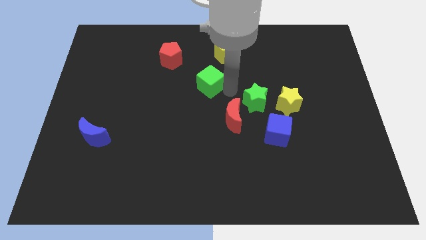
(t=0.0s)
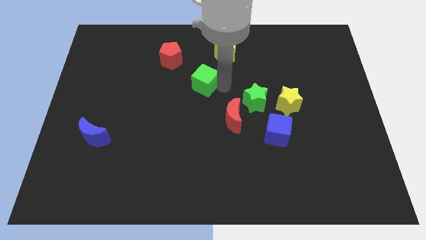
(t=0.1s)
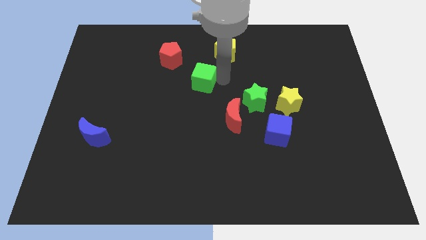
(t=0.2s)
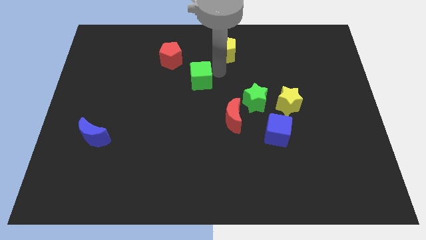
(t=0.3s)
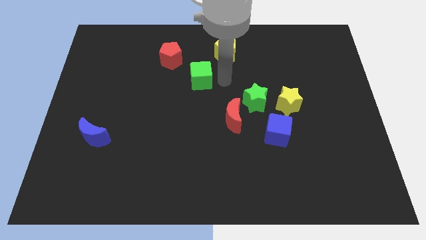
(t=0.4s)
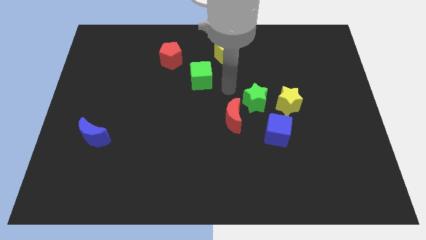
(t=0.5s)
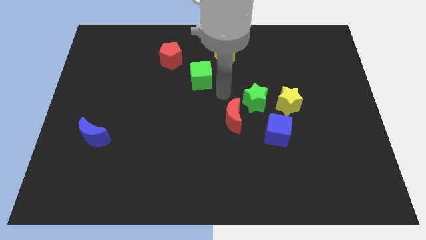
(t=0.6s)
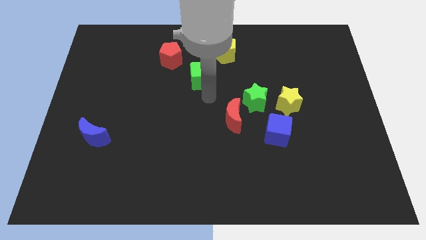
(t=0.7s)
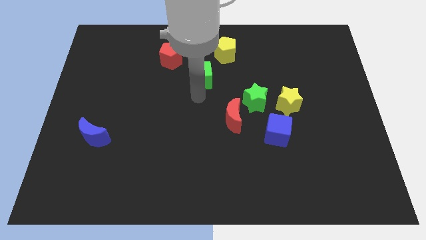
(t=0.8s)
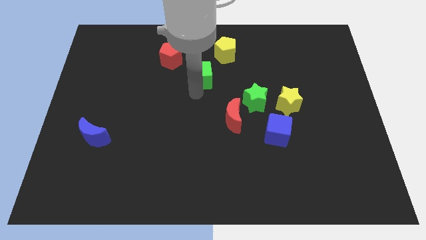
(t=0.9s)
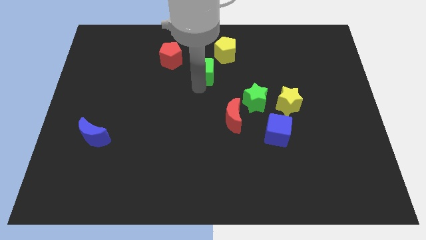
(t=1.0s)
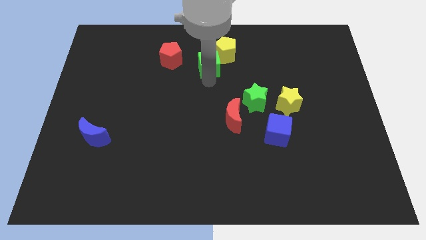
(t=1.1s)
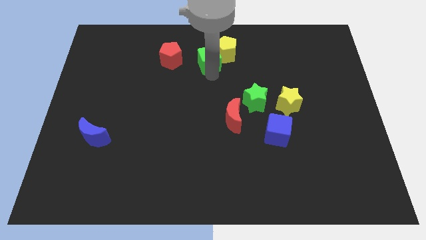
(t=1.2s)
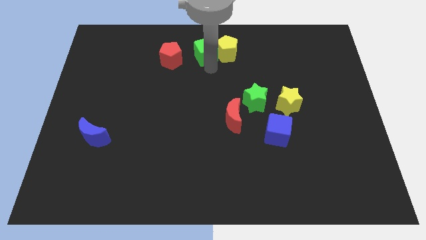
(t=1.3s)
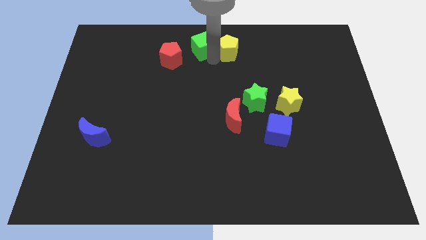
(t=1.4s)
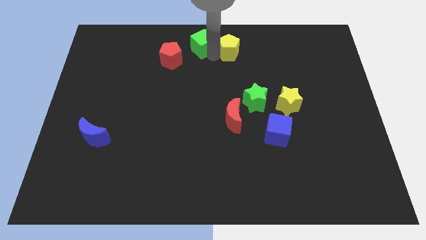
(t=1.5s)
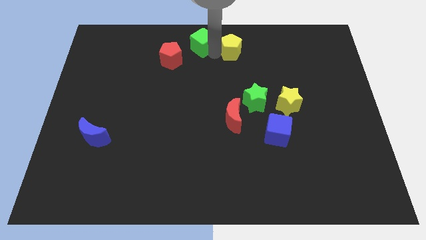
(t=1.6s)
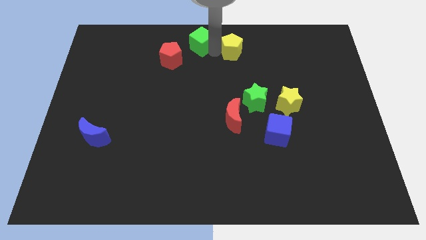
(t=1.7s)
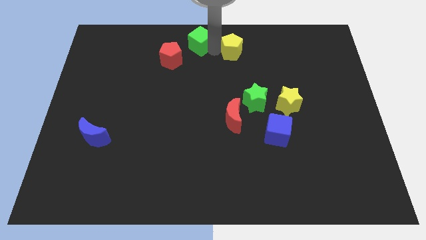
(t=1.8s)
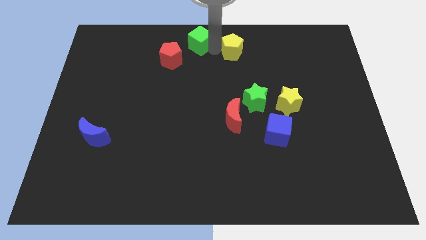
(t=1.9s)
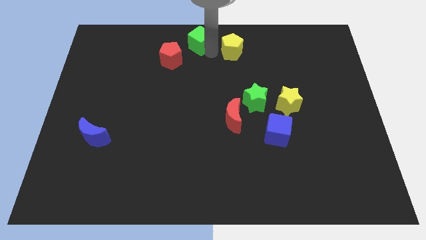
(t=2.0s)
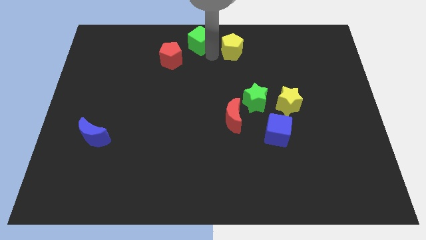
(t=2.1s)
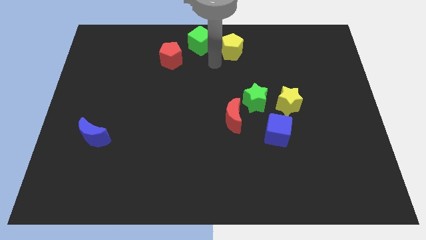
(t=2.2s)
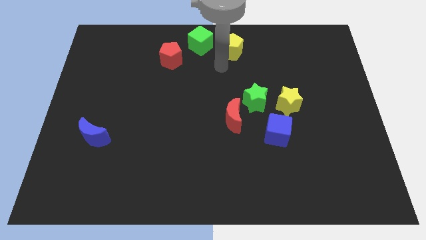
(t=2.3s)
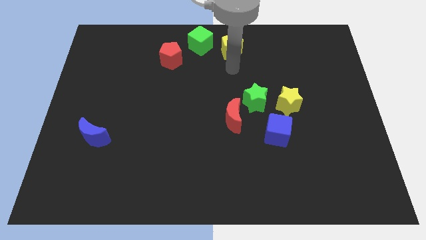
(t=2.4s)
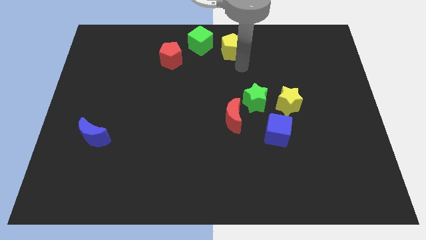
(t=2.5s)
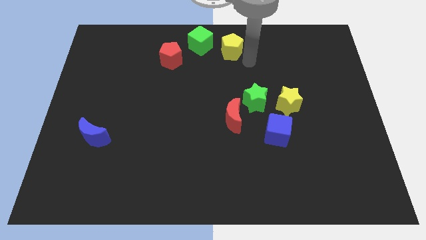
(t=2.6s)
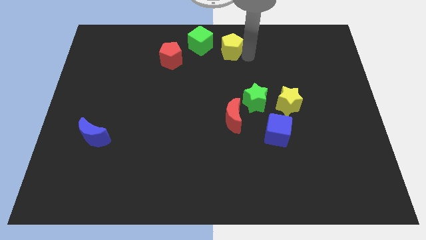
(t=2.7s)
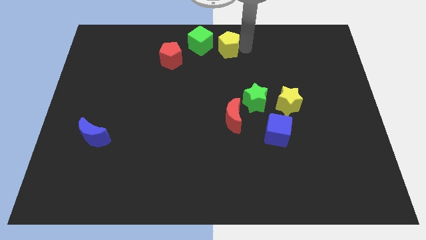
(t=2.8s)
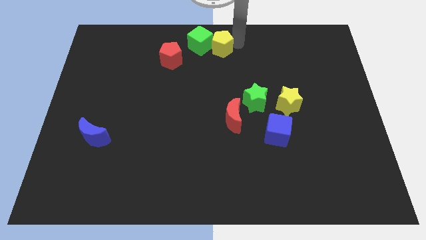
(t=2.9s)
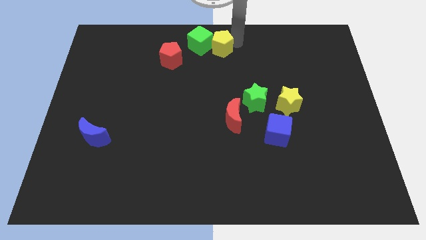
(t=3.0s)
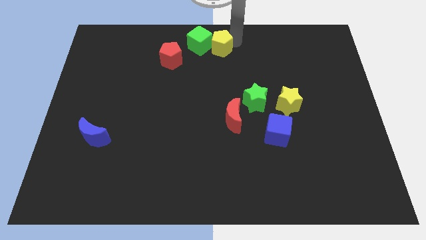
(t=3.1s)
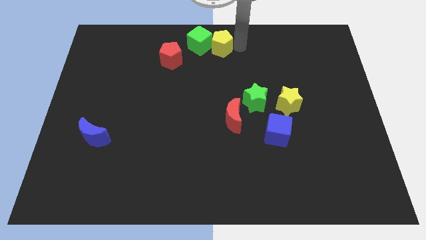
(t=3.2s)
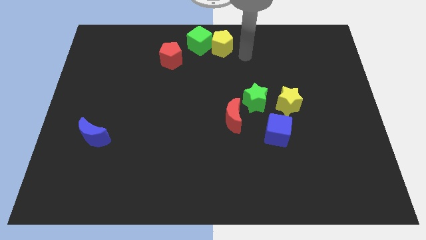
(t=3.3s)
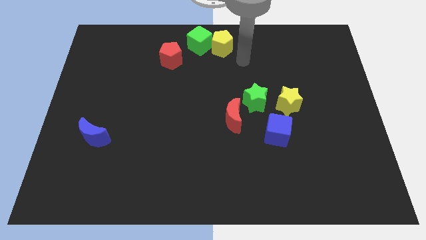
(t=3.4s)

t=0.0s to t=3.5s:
push the green cube left to the yellow pentagon

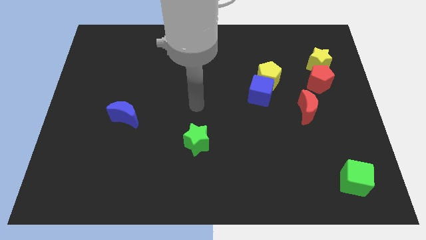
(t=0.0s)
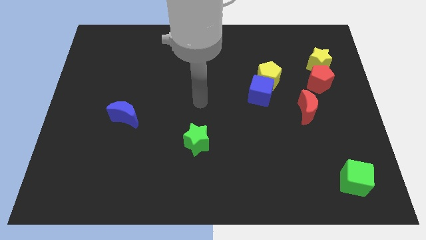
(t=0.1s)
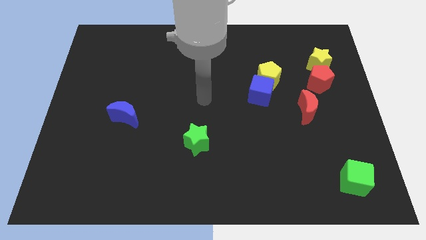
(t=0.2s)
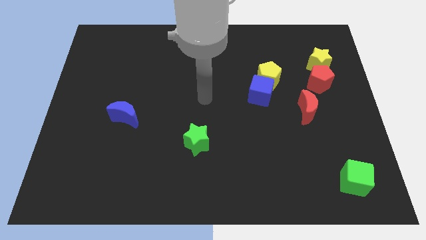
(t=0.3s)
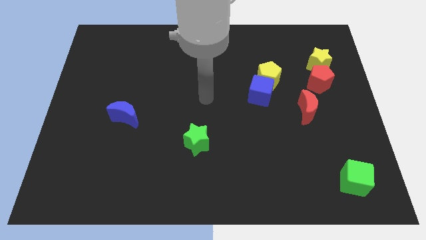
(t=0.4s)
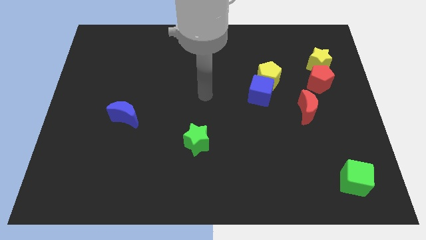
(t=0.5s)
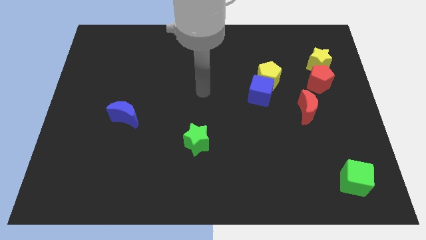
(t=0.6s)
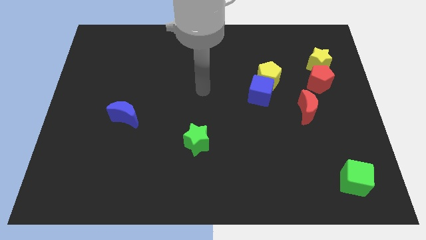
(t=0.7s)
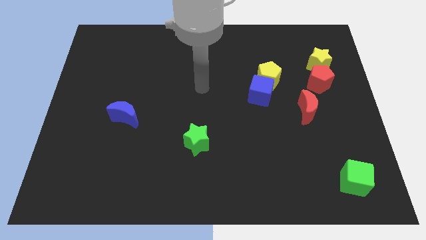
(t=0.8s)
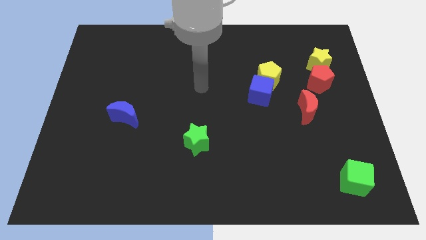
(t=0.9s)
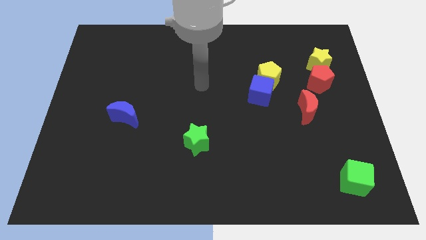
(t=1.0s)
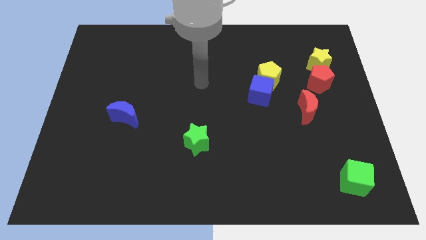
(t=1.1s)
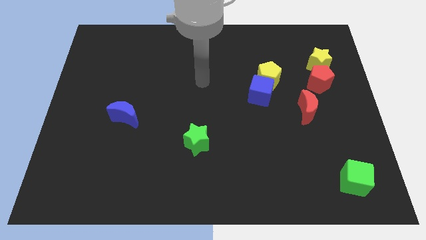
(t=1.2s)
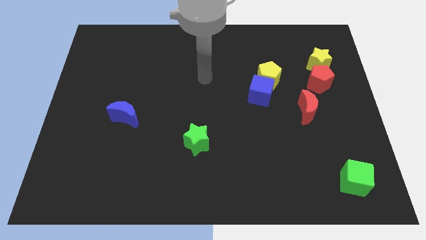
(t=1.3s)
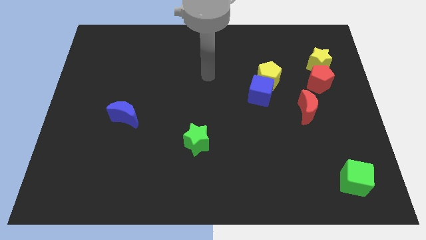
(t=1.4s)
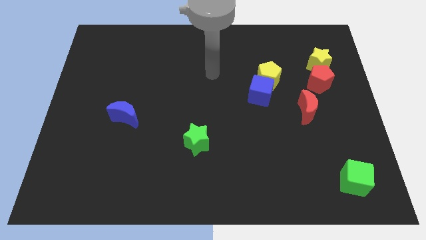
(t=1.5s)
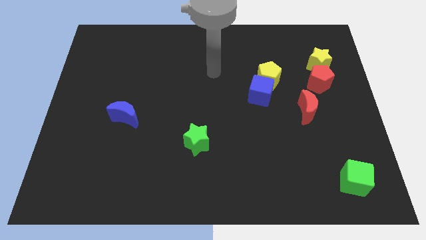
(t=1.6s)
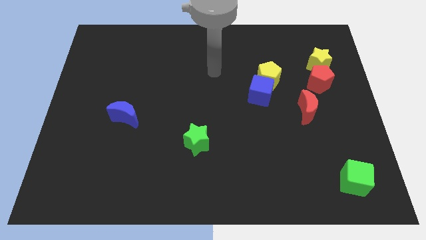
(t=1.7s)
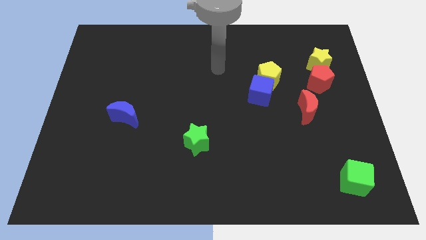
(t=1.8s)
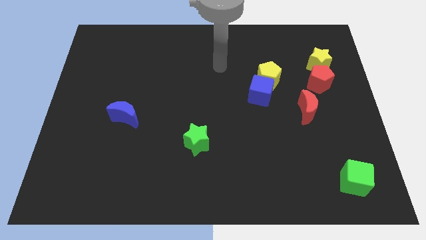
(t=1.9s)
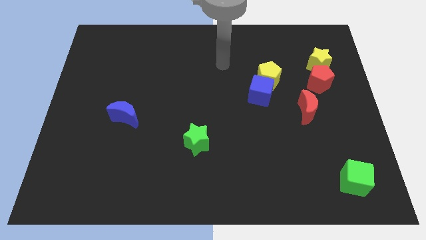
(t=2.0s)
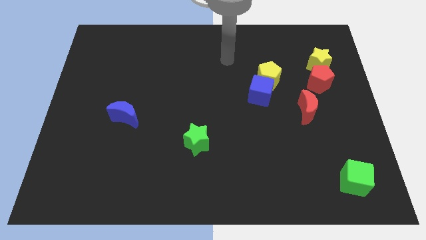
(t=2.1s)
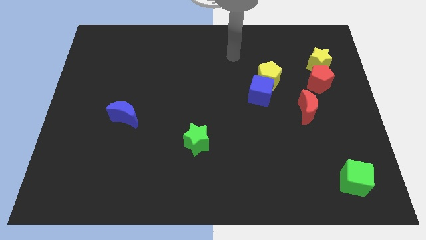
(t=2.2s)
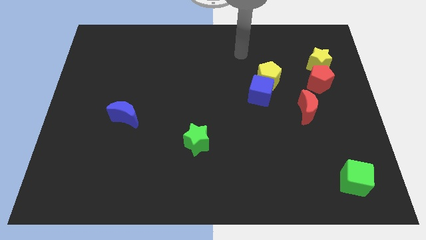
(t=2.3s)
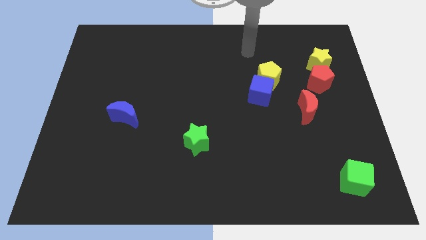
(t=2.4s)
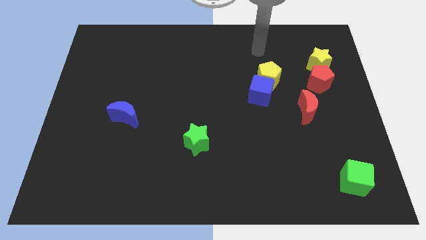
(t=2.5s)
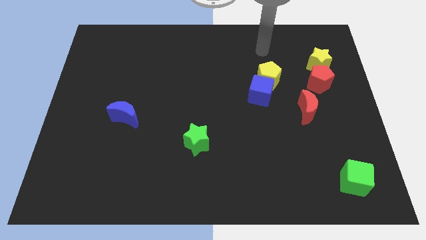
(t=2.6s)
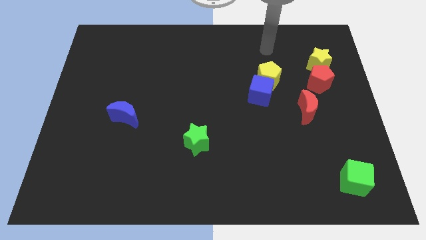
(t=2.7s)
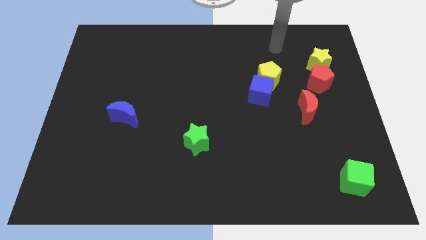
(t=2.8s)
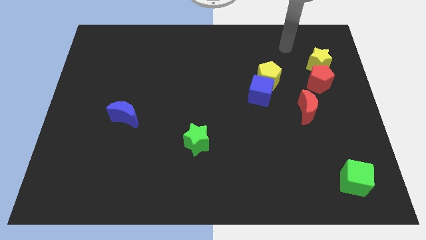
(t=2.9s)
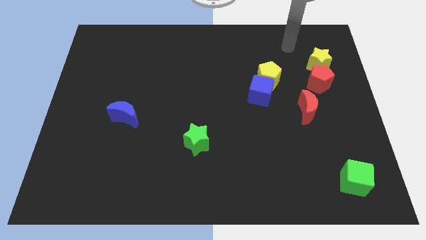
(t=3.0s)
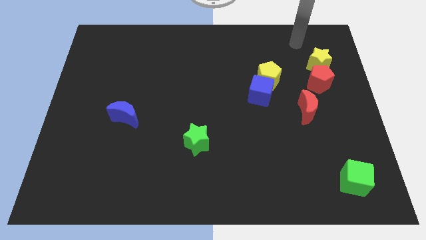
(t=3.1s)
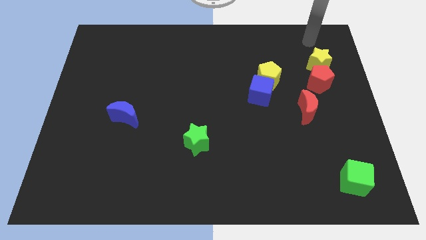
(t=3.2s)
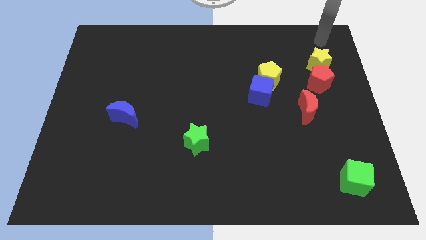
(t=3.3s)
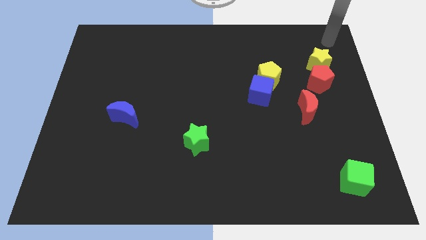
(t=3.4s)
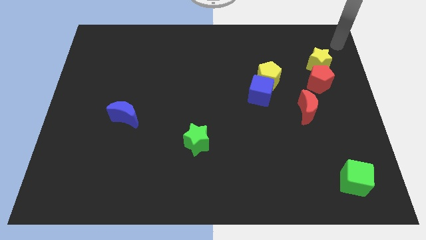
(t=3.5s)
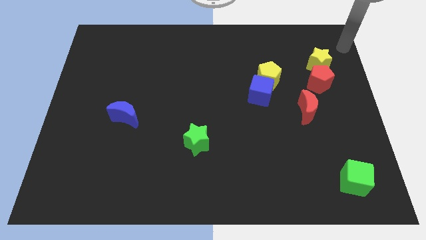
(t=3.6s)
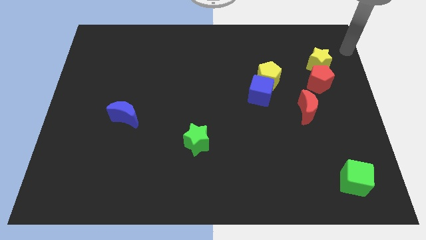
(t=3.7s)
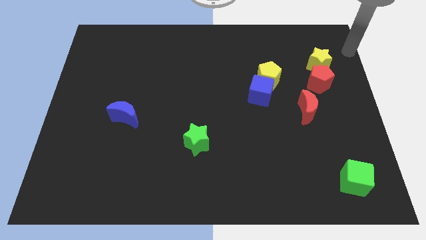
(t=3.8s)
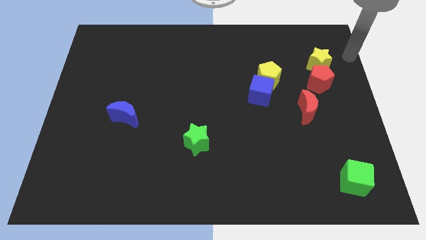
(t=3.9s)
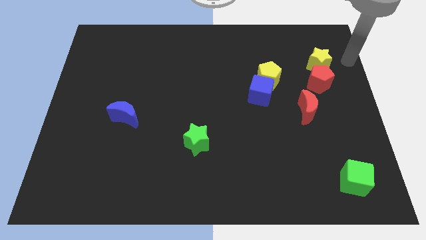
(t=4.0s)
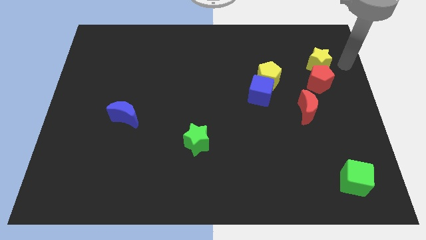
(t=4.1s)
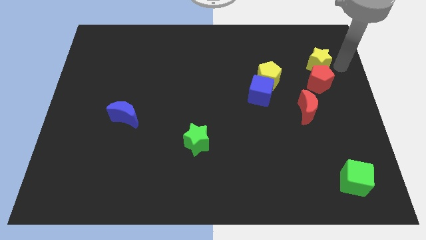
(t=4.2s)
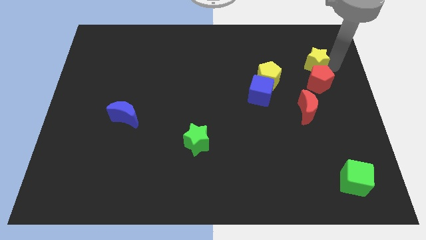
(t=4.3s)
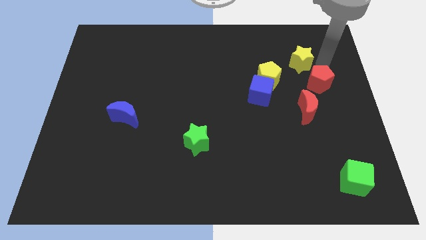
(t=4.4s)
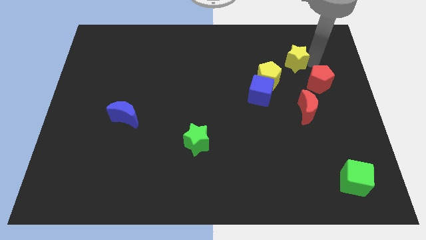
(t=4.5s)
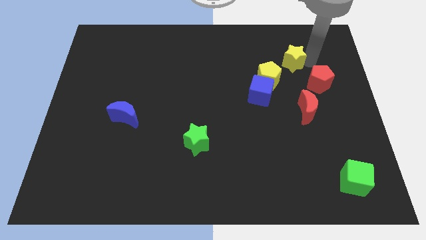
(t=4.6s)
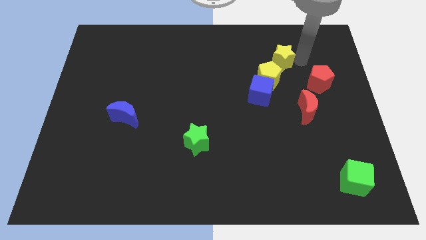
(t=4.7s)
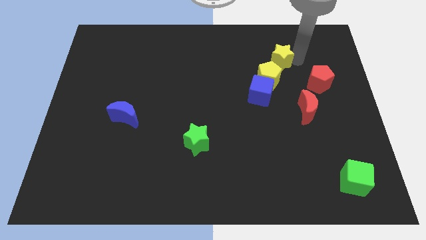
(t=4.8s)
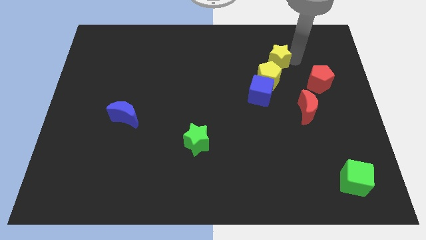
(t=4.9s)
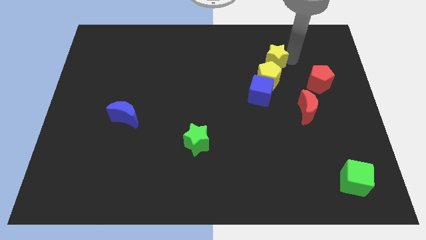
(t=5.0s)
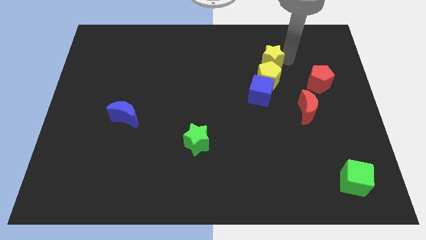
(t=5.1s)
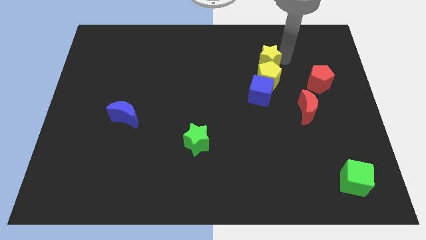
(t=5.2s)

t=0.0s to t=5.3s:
move the yellow star above the yellow pentagon

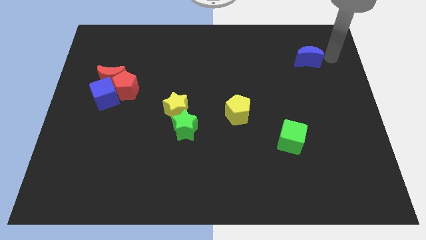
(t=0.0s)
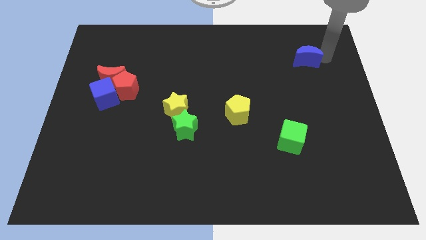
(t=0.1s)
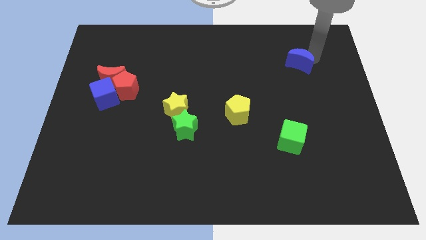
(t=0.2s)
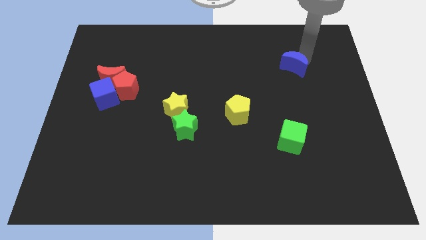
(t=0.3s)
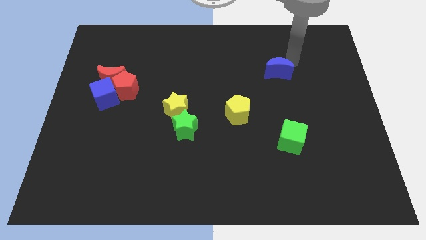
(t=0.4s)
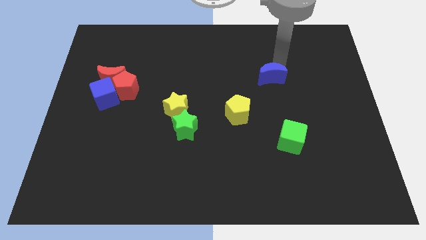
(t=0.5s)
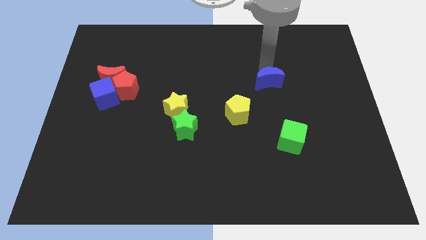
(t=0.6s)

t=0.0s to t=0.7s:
move the blue crescent to the bottom of the board
